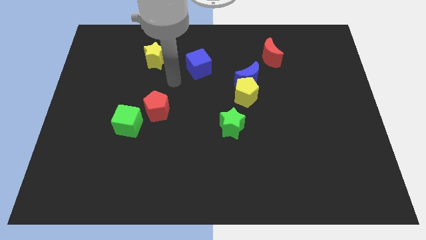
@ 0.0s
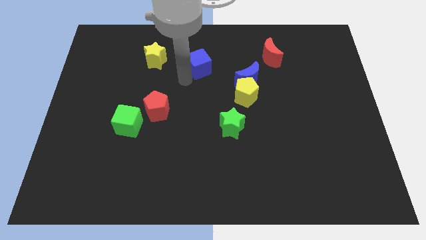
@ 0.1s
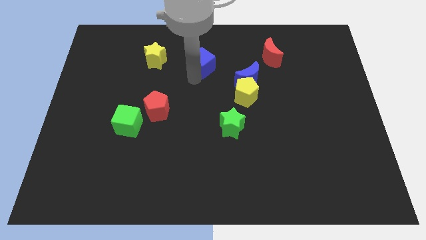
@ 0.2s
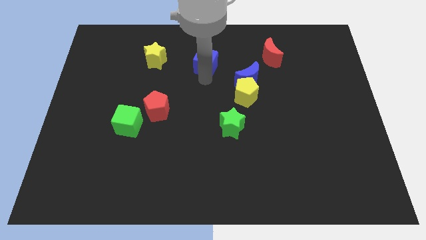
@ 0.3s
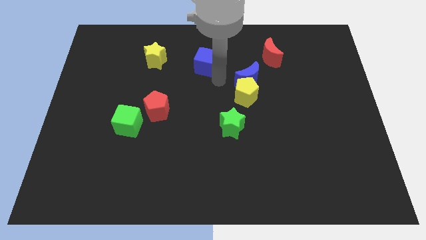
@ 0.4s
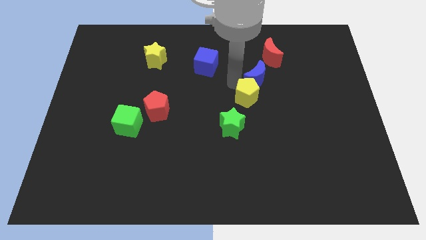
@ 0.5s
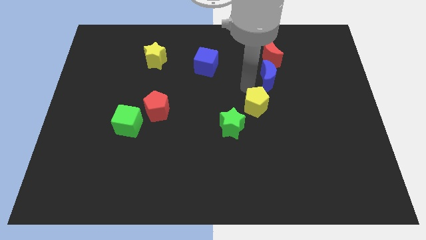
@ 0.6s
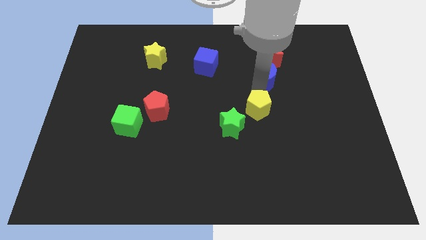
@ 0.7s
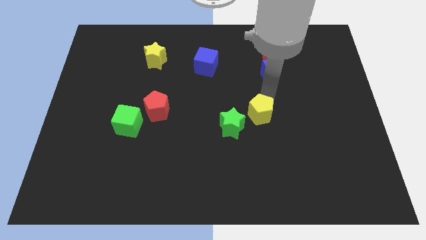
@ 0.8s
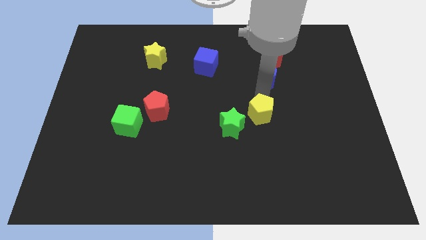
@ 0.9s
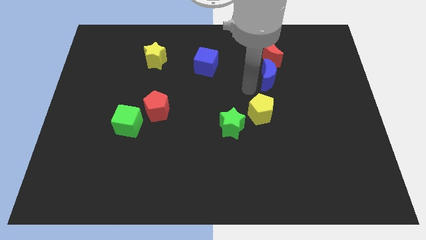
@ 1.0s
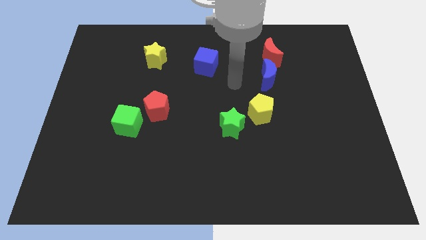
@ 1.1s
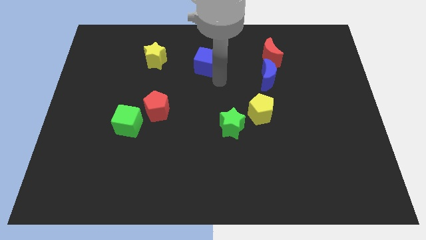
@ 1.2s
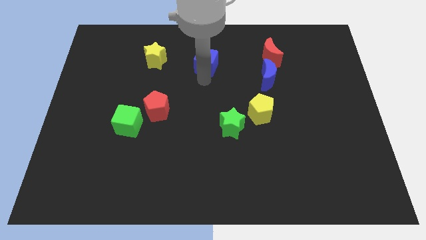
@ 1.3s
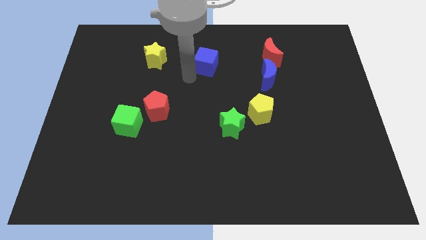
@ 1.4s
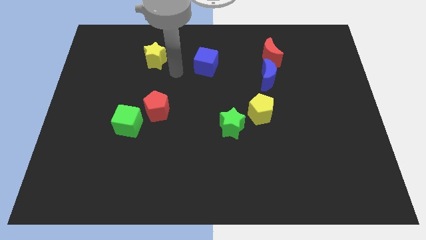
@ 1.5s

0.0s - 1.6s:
separate blue moon and yellow pentagon

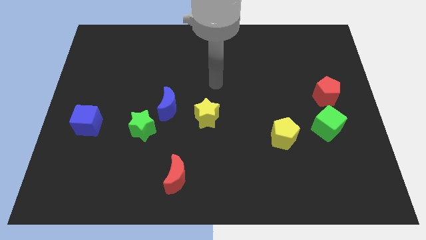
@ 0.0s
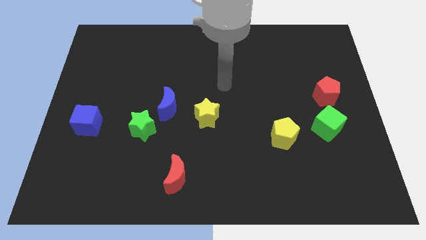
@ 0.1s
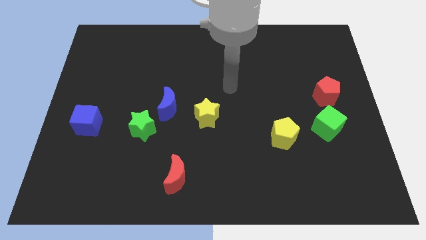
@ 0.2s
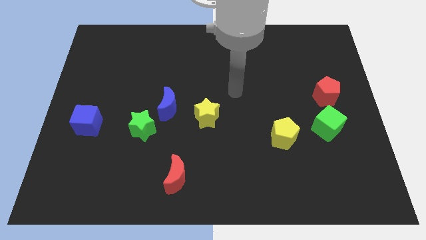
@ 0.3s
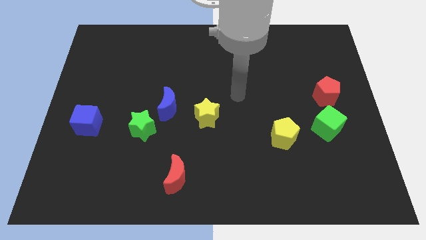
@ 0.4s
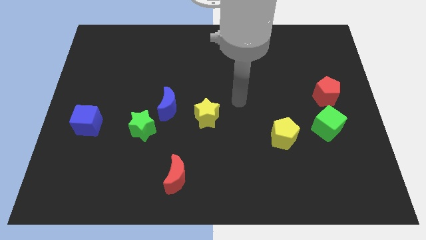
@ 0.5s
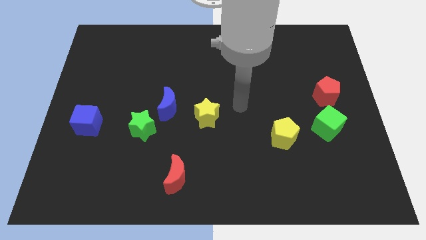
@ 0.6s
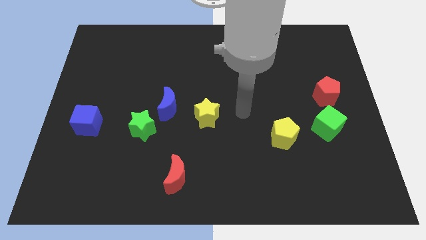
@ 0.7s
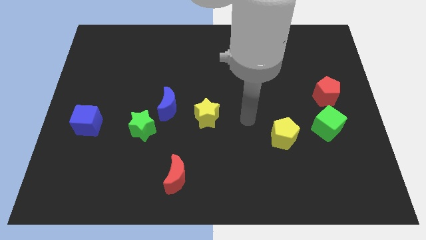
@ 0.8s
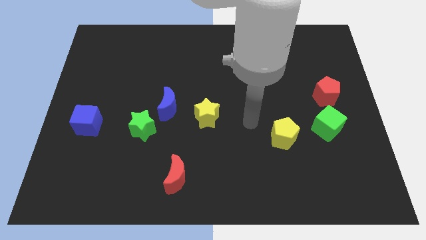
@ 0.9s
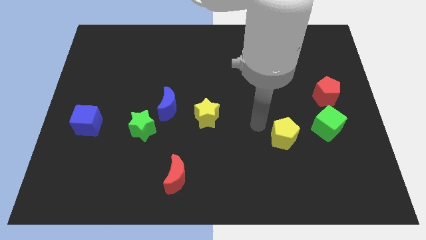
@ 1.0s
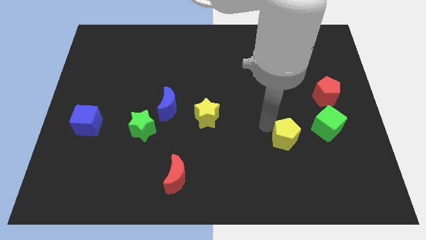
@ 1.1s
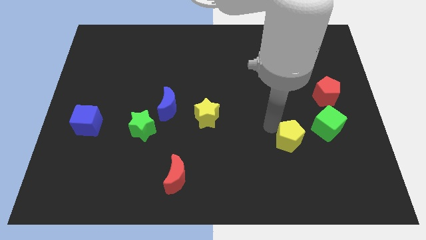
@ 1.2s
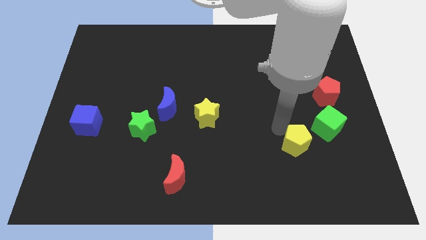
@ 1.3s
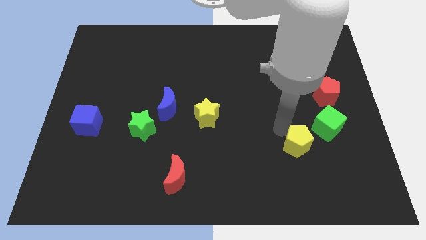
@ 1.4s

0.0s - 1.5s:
push the yellow pentagon slightly towards bottom side of board

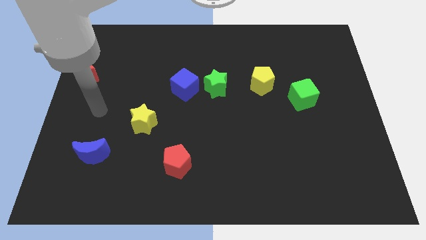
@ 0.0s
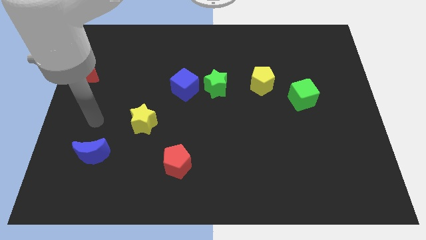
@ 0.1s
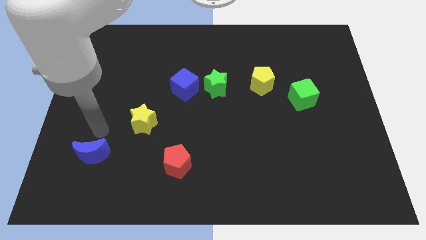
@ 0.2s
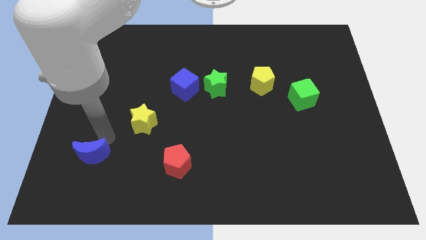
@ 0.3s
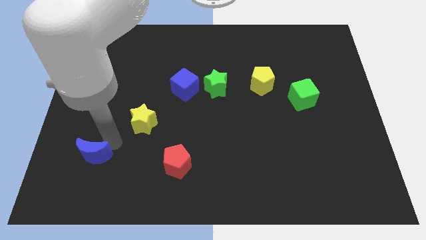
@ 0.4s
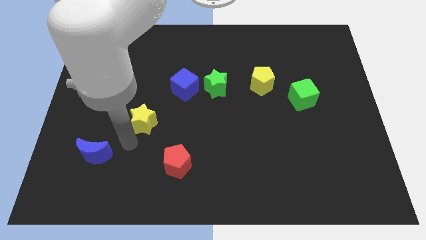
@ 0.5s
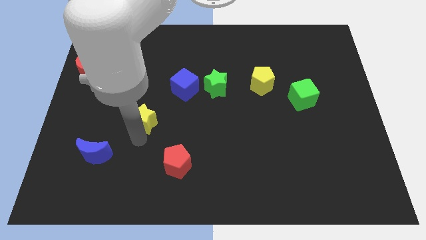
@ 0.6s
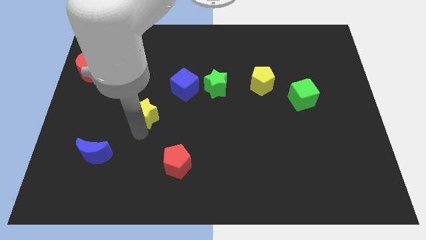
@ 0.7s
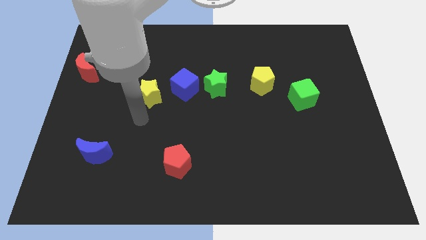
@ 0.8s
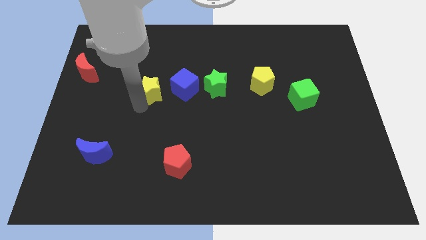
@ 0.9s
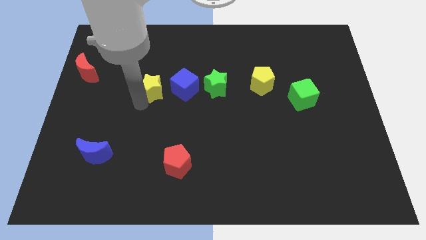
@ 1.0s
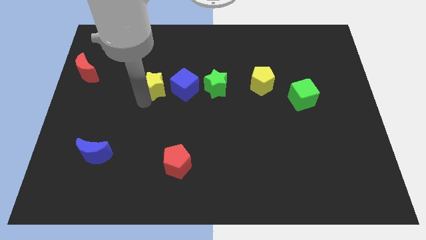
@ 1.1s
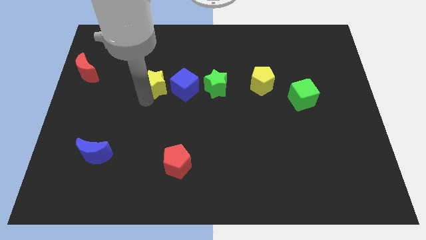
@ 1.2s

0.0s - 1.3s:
move the yellow star parallel left to the blue cube

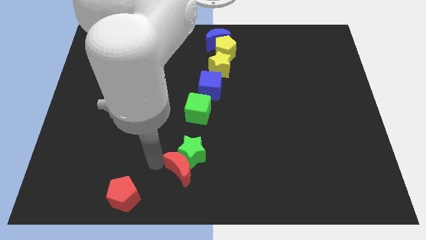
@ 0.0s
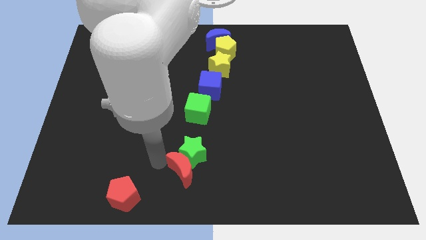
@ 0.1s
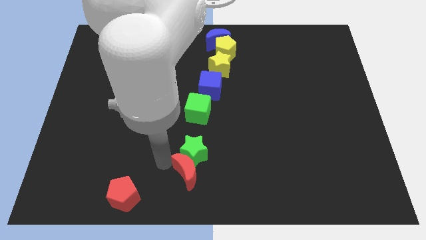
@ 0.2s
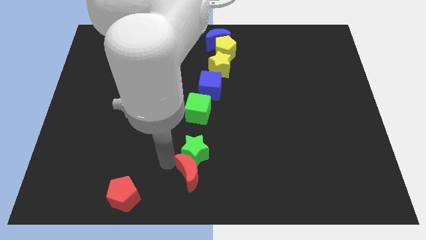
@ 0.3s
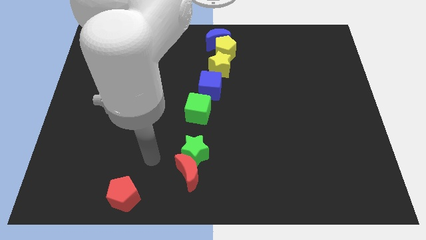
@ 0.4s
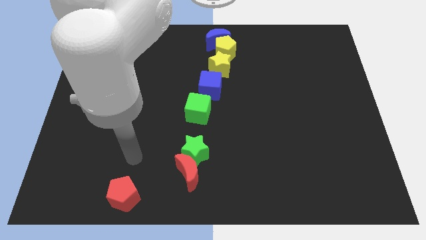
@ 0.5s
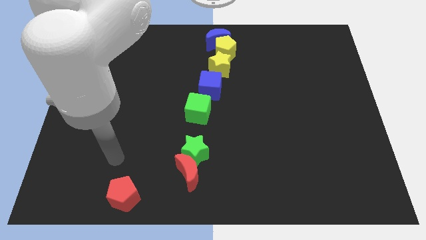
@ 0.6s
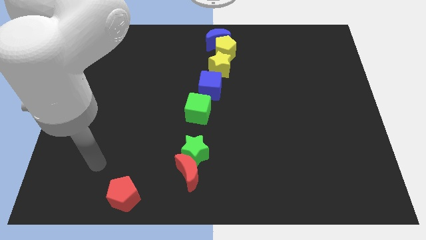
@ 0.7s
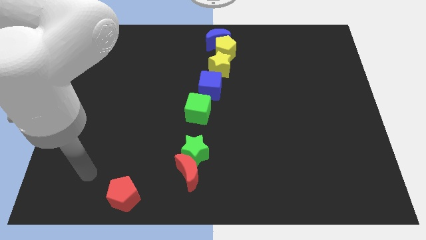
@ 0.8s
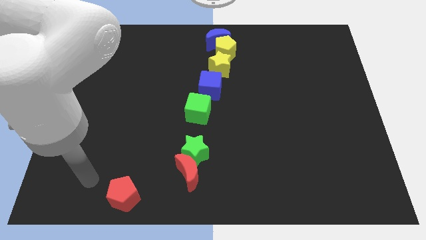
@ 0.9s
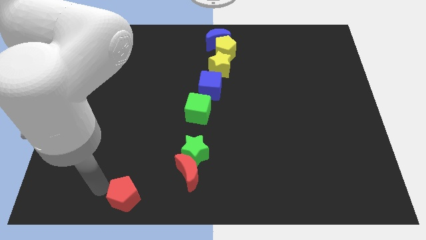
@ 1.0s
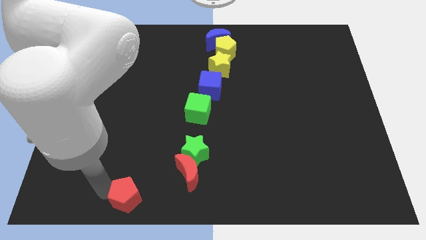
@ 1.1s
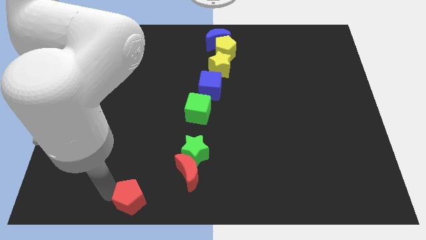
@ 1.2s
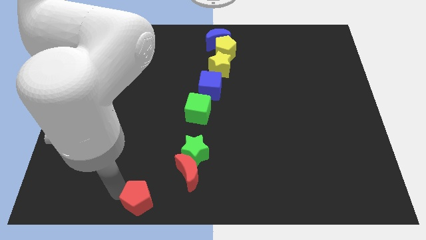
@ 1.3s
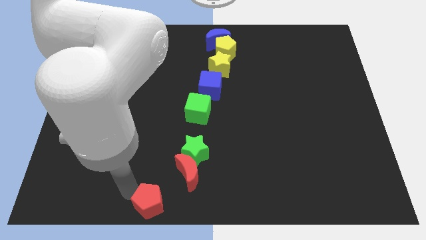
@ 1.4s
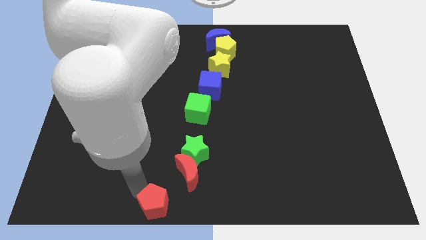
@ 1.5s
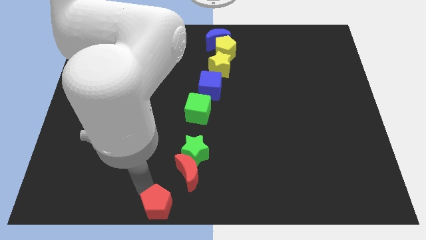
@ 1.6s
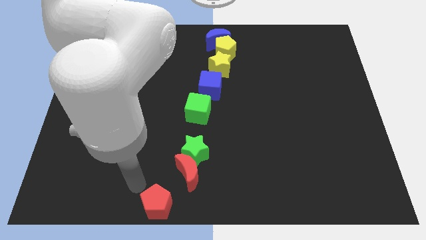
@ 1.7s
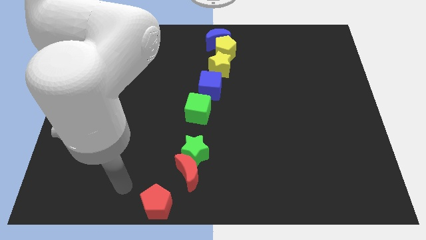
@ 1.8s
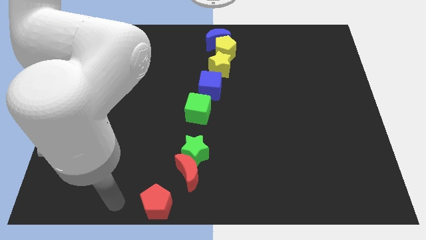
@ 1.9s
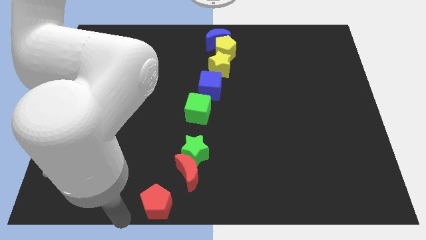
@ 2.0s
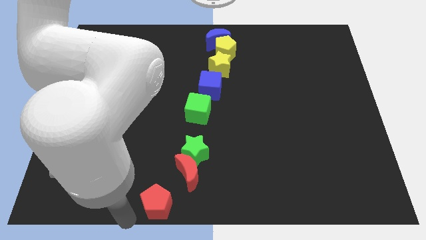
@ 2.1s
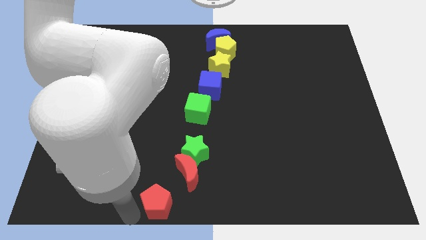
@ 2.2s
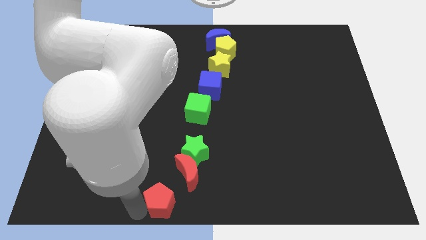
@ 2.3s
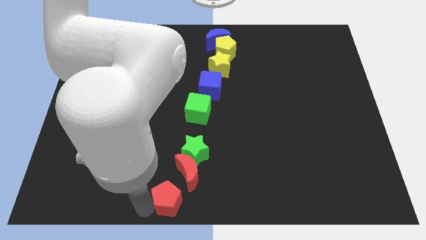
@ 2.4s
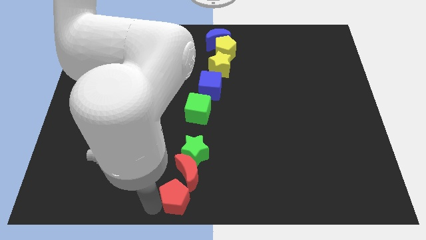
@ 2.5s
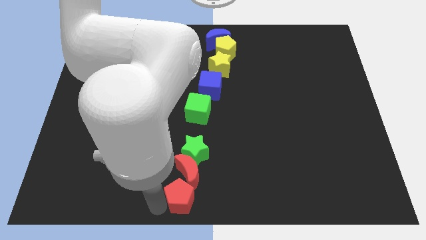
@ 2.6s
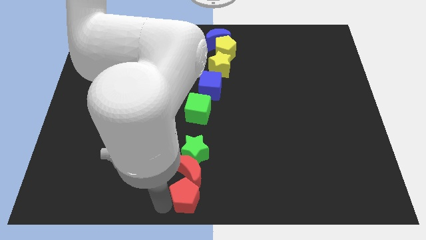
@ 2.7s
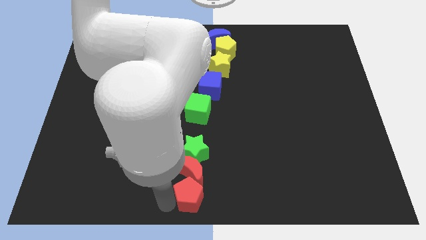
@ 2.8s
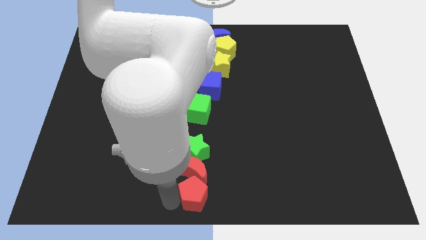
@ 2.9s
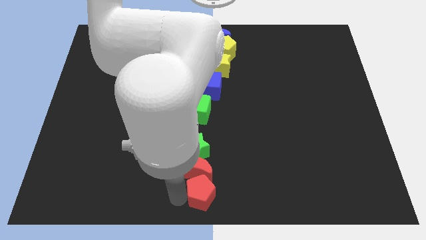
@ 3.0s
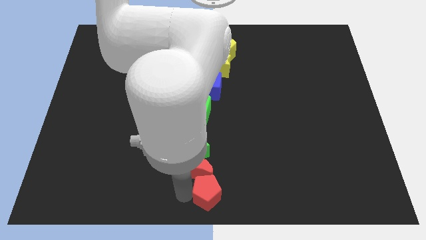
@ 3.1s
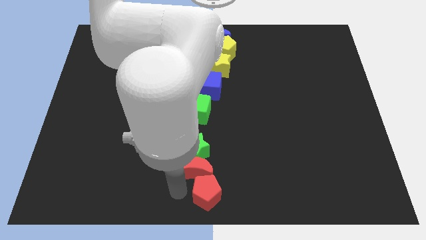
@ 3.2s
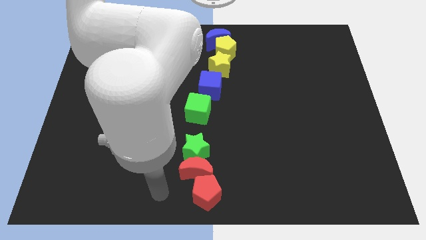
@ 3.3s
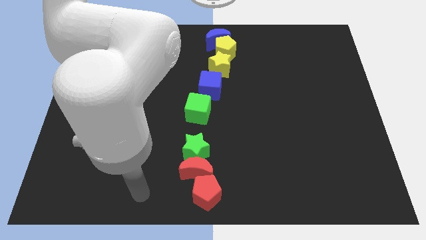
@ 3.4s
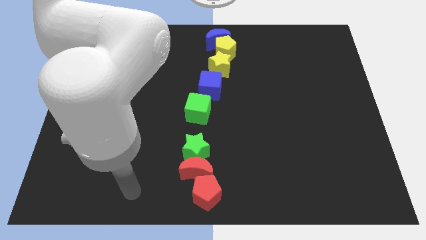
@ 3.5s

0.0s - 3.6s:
push the red pentagon to the bottom of the red moon

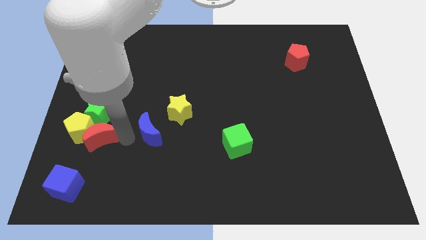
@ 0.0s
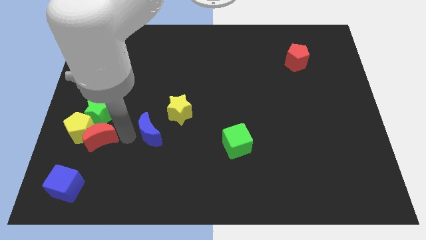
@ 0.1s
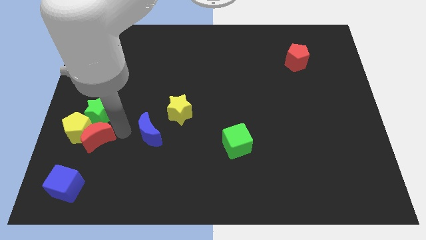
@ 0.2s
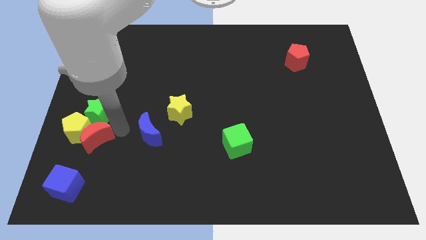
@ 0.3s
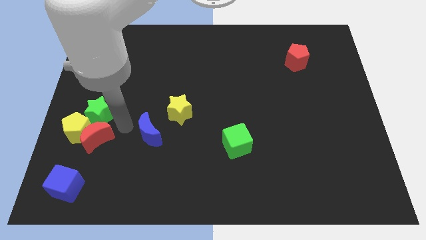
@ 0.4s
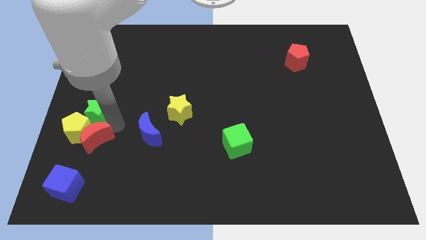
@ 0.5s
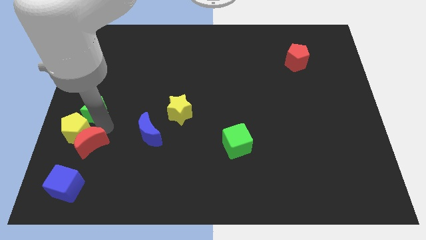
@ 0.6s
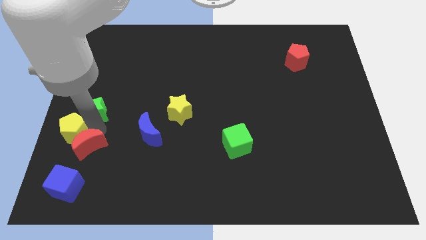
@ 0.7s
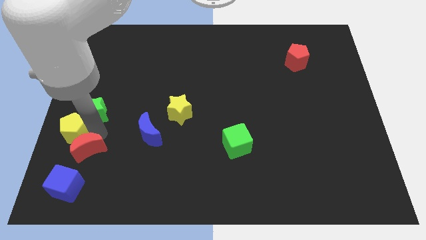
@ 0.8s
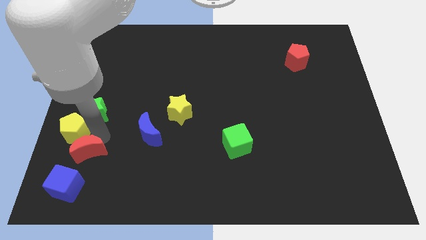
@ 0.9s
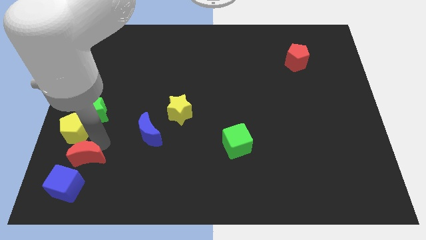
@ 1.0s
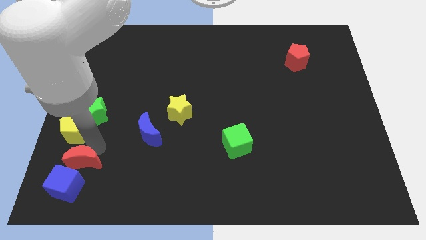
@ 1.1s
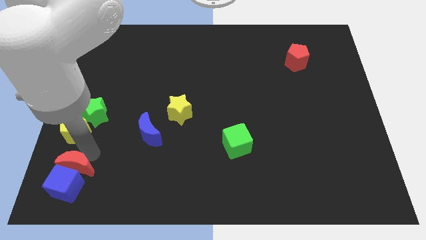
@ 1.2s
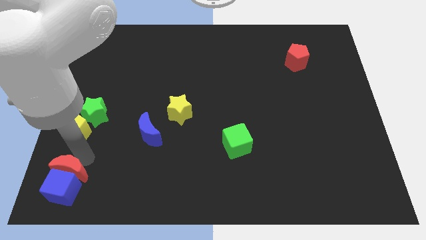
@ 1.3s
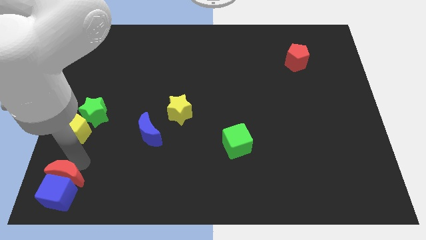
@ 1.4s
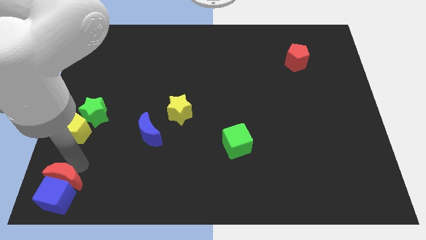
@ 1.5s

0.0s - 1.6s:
place the red crescent above the blue cube
